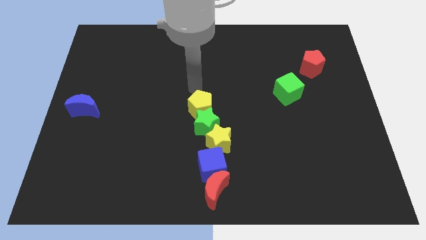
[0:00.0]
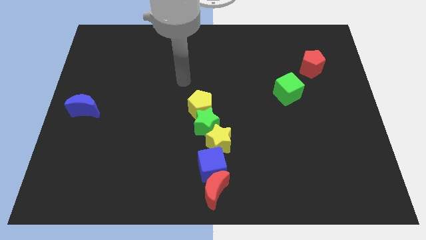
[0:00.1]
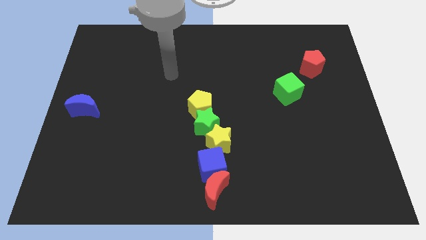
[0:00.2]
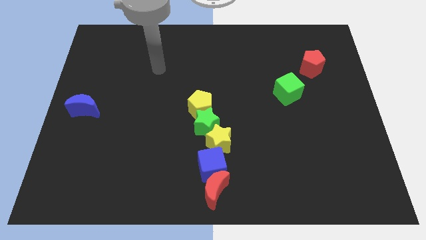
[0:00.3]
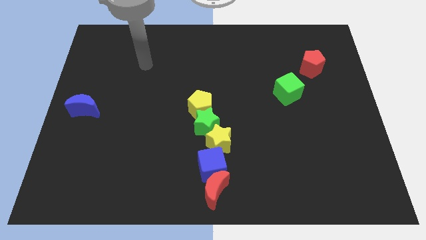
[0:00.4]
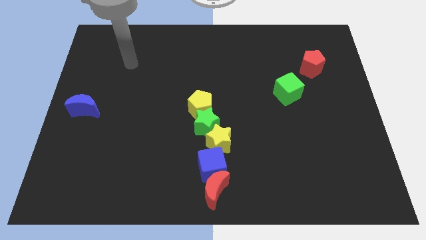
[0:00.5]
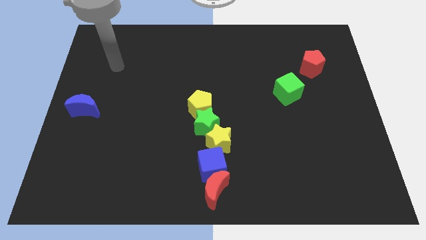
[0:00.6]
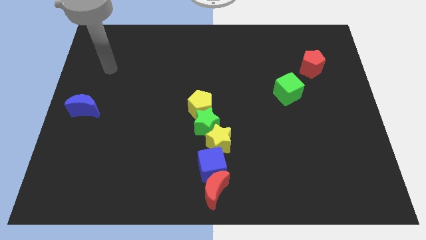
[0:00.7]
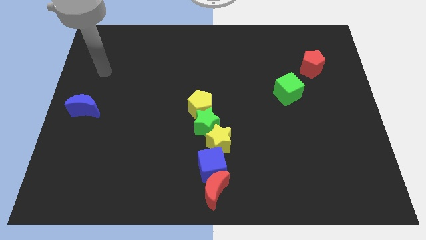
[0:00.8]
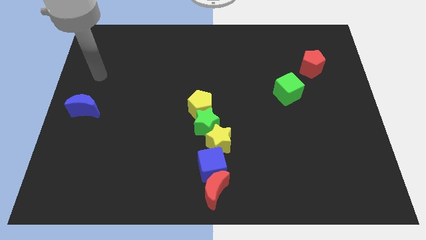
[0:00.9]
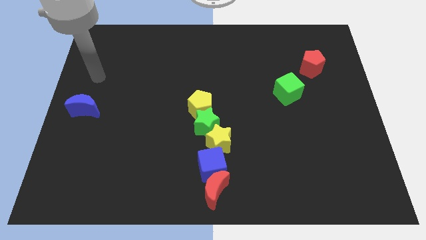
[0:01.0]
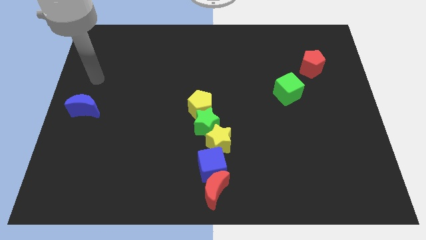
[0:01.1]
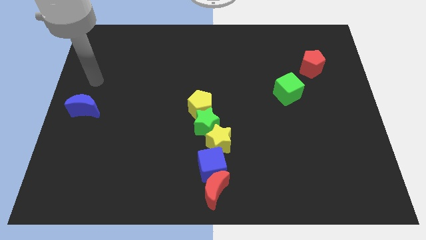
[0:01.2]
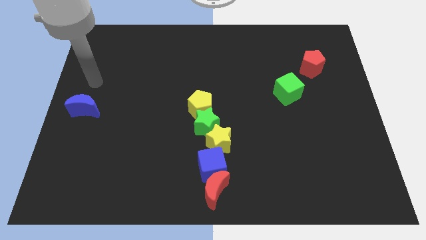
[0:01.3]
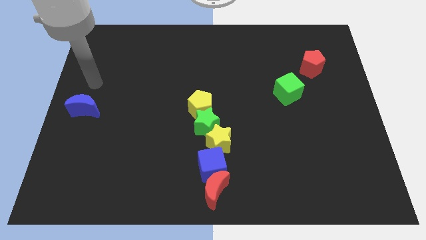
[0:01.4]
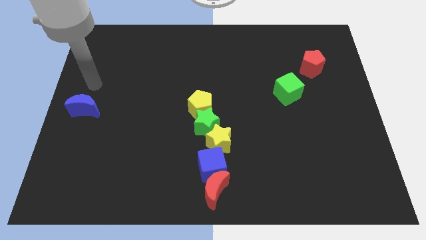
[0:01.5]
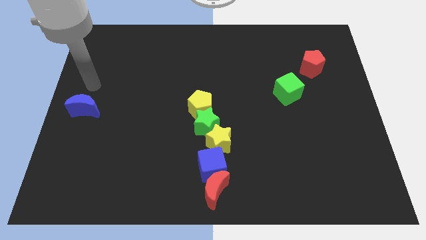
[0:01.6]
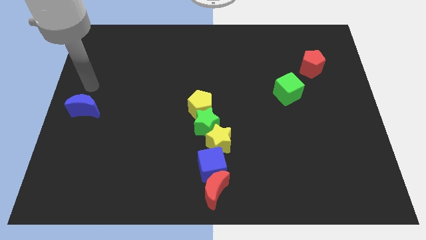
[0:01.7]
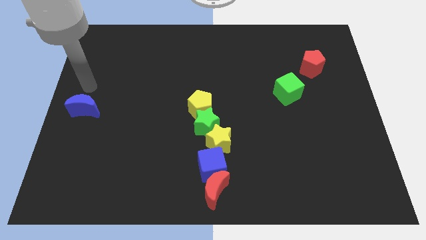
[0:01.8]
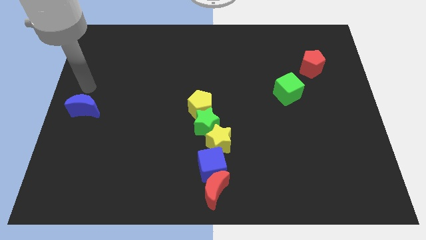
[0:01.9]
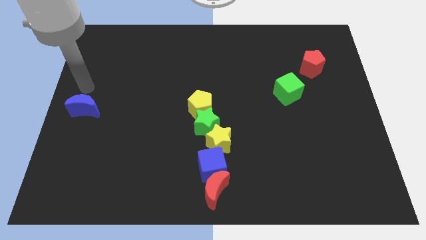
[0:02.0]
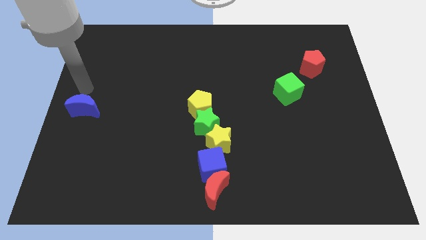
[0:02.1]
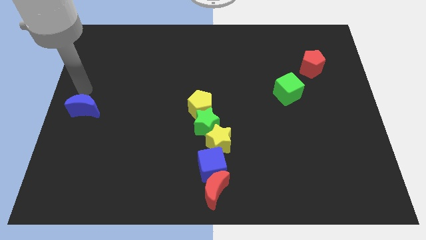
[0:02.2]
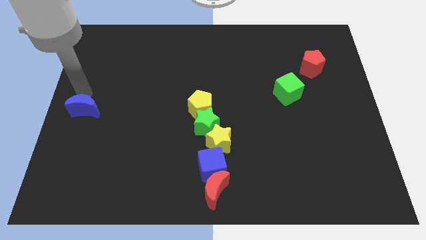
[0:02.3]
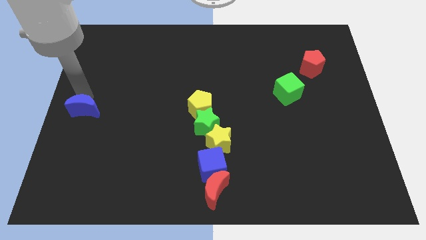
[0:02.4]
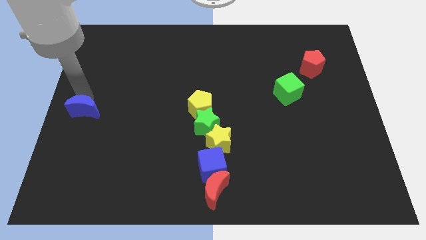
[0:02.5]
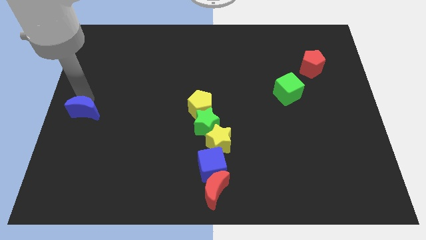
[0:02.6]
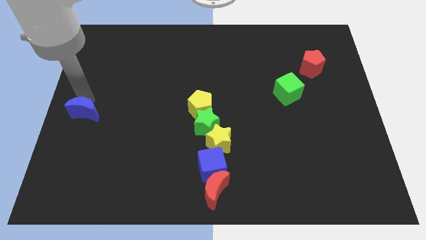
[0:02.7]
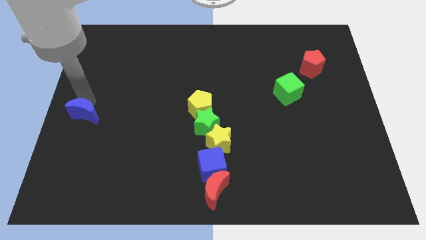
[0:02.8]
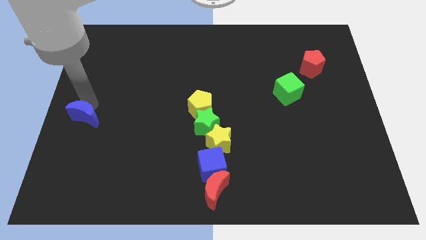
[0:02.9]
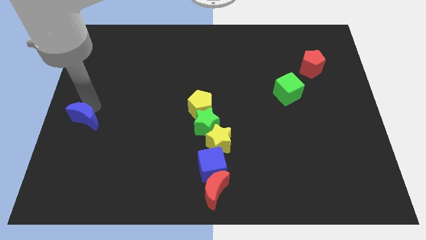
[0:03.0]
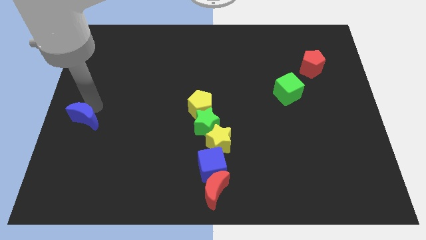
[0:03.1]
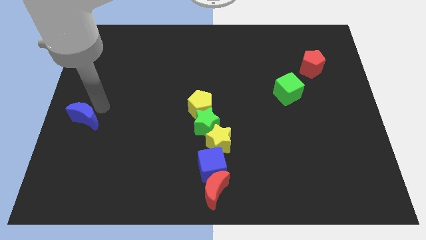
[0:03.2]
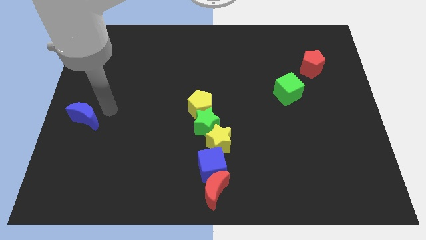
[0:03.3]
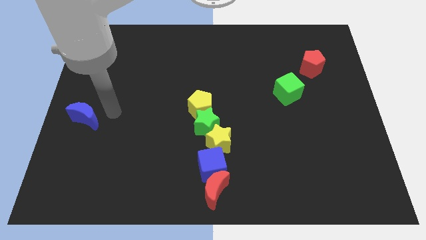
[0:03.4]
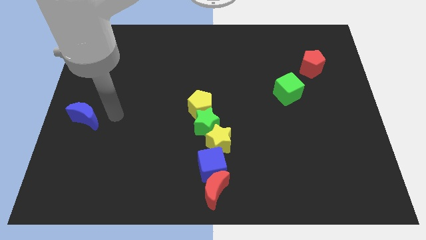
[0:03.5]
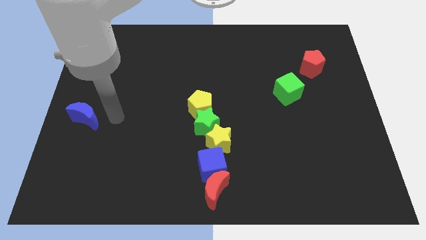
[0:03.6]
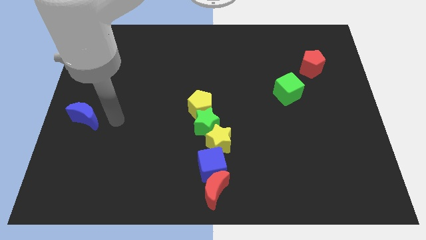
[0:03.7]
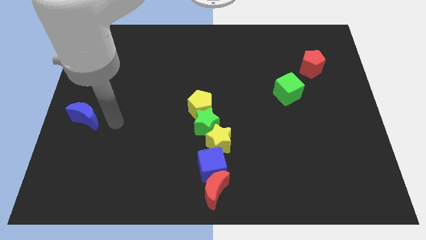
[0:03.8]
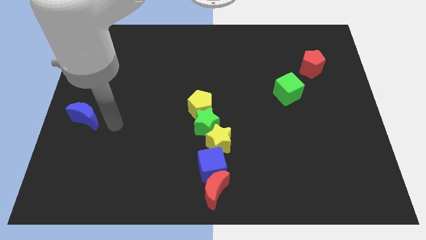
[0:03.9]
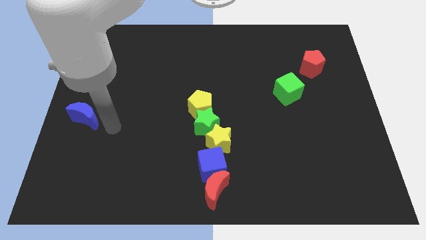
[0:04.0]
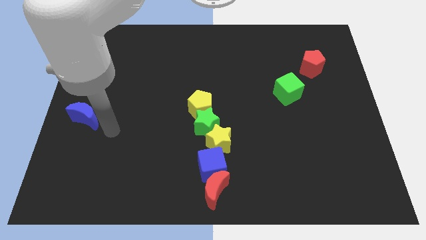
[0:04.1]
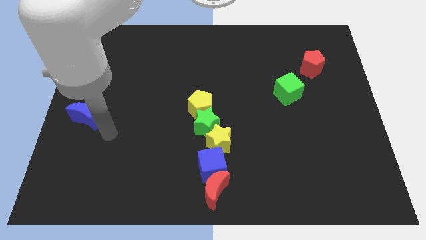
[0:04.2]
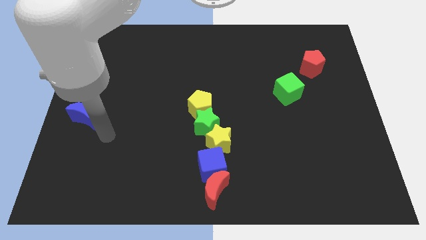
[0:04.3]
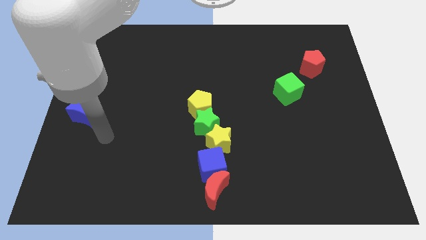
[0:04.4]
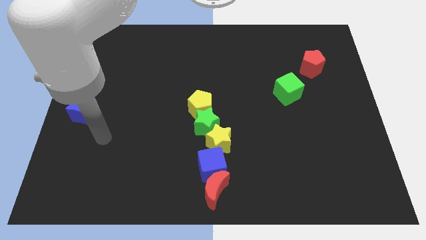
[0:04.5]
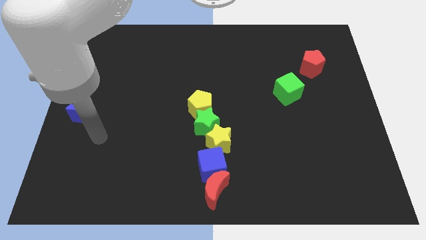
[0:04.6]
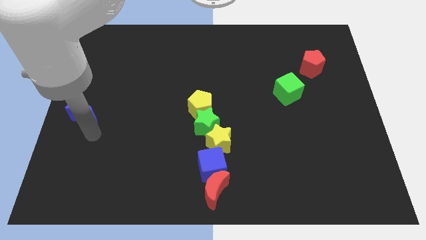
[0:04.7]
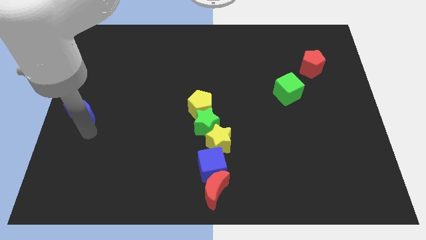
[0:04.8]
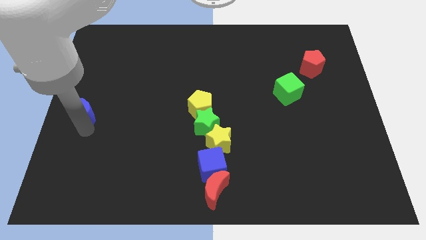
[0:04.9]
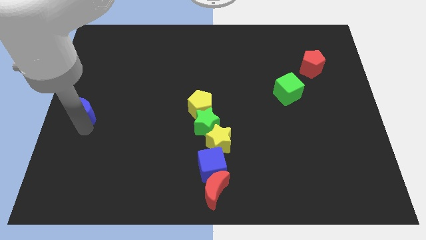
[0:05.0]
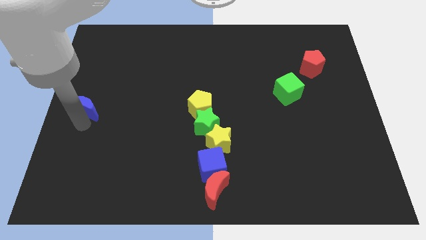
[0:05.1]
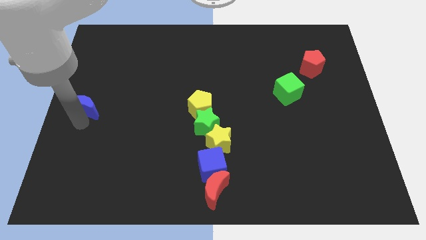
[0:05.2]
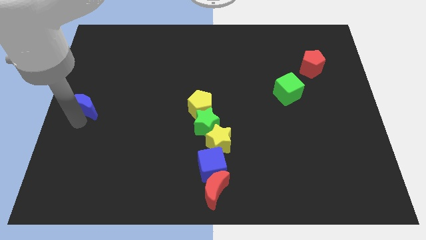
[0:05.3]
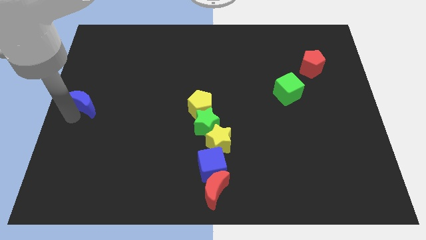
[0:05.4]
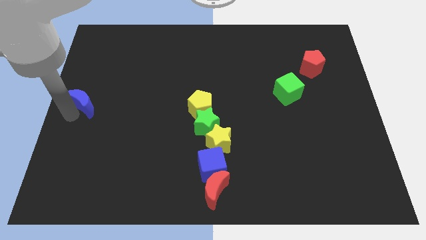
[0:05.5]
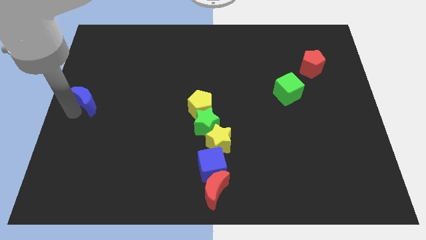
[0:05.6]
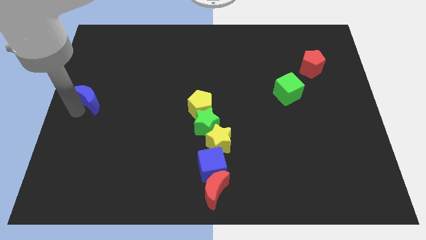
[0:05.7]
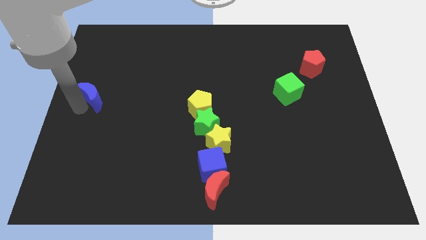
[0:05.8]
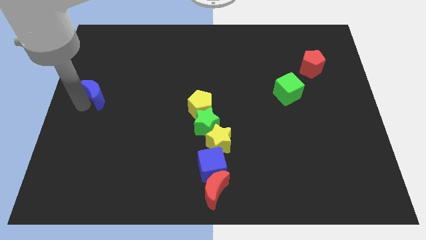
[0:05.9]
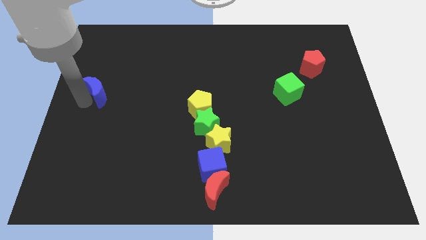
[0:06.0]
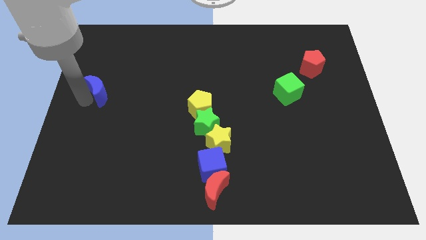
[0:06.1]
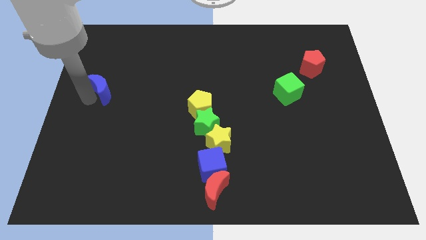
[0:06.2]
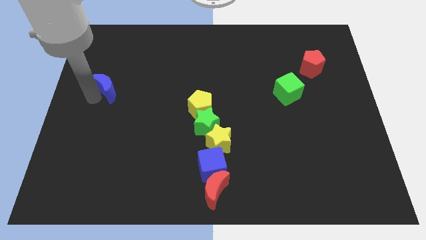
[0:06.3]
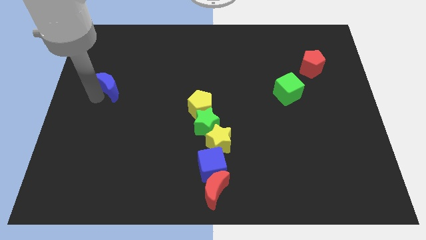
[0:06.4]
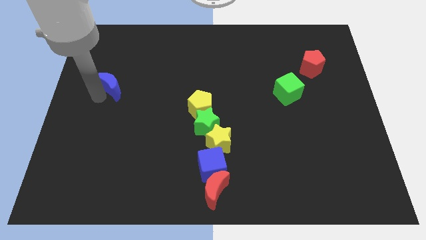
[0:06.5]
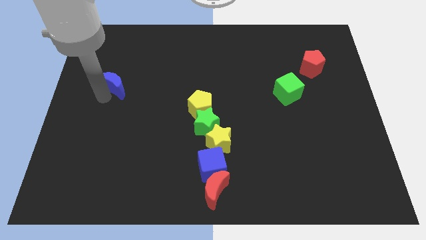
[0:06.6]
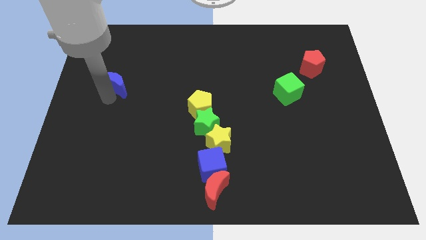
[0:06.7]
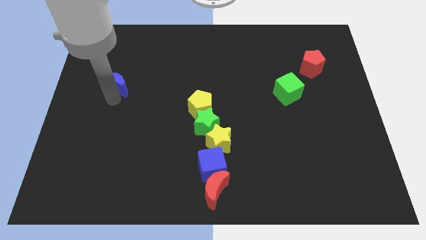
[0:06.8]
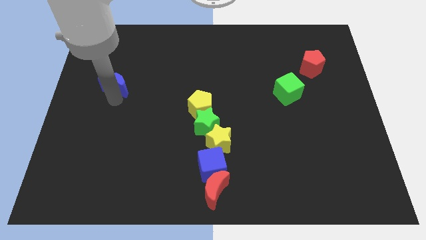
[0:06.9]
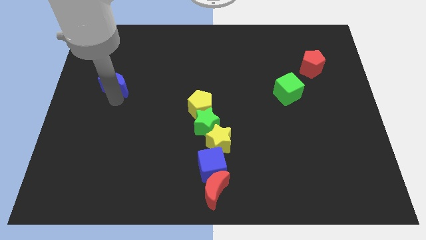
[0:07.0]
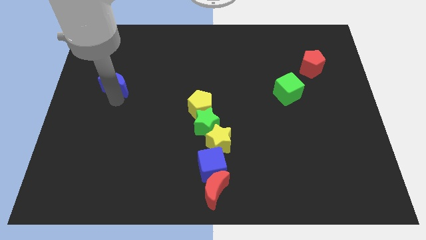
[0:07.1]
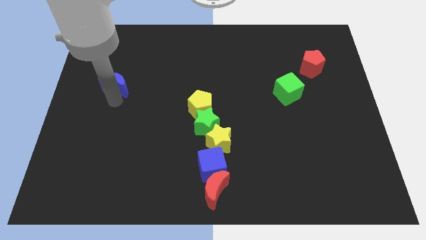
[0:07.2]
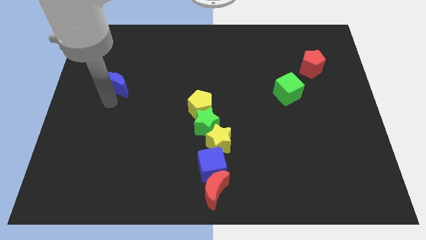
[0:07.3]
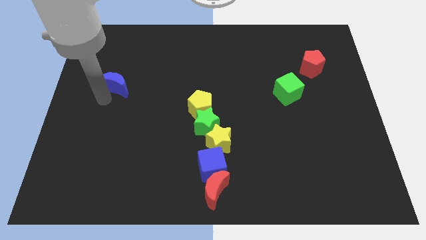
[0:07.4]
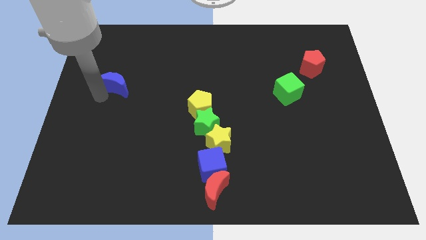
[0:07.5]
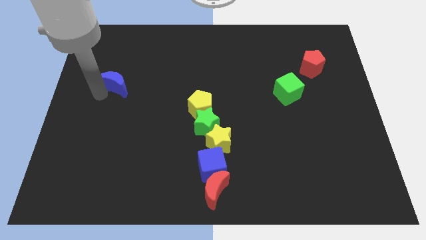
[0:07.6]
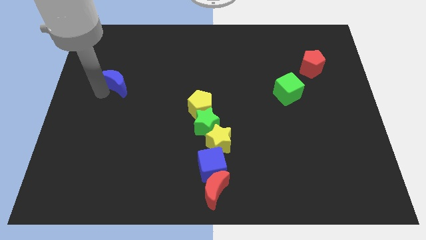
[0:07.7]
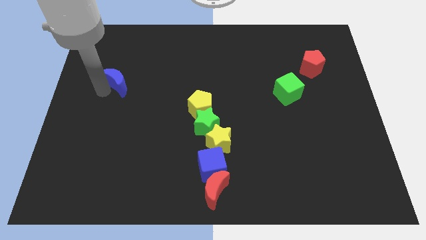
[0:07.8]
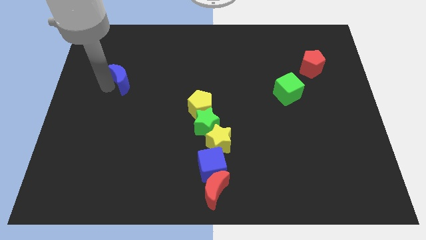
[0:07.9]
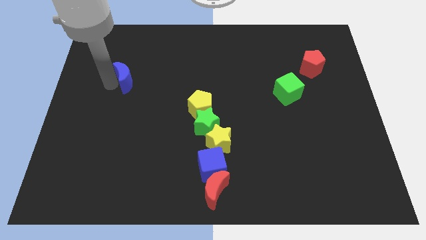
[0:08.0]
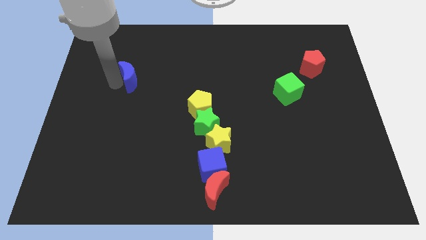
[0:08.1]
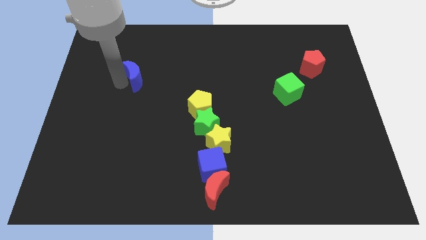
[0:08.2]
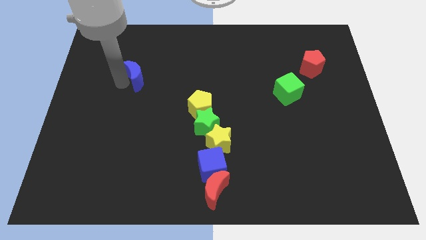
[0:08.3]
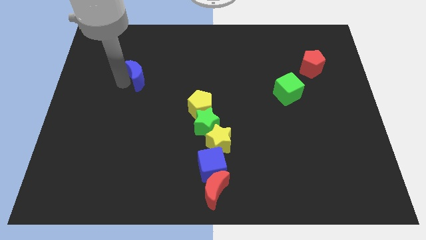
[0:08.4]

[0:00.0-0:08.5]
push the blue crescent to the top left of the yellow pentagon

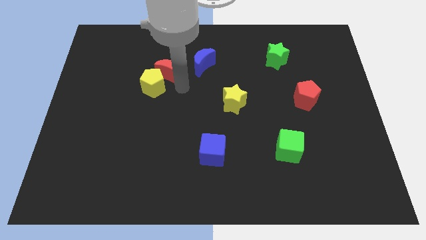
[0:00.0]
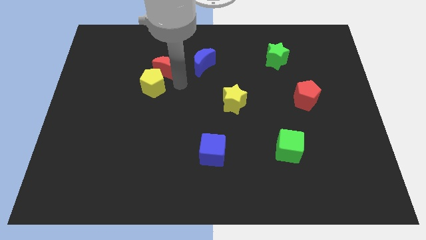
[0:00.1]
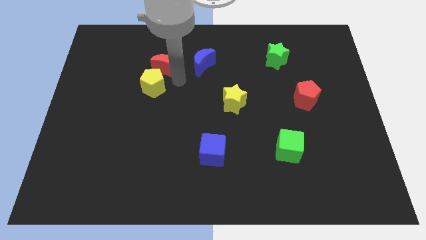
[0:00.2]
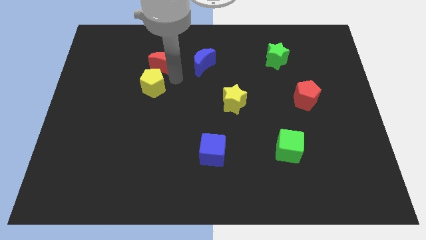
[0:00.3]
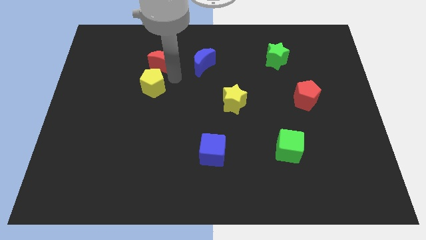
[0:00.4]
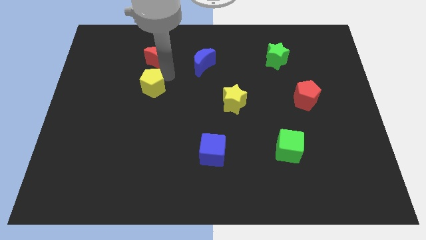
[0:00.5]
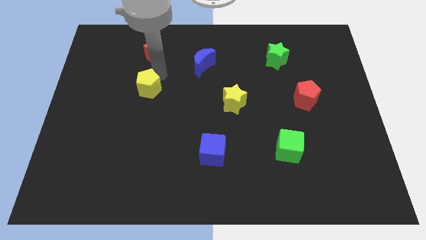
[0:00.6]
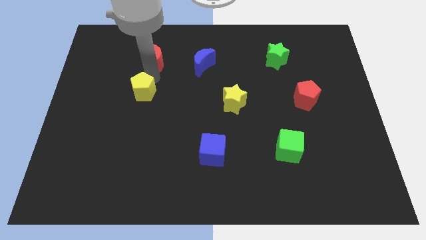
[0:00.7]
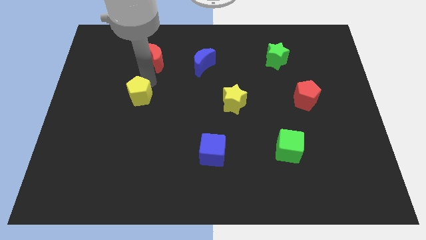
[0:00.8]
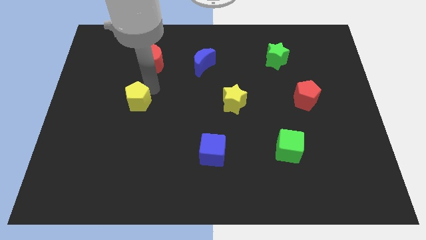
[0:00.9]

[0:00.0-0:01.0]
separate the red crescent from the yellow pentagon
